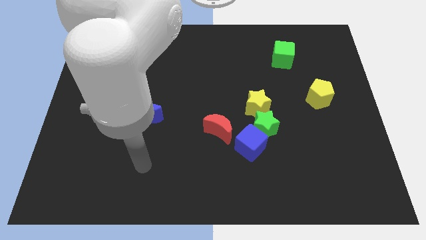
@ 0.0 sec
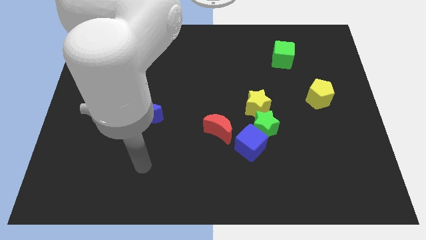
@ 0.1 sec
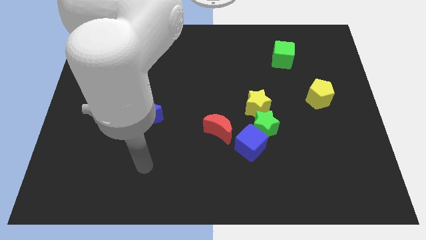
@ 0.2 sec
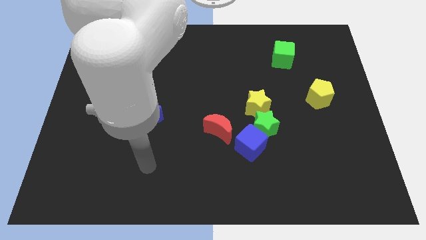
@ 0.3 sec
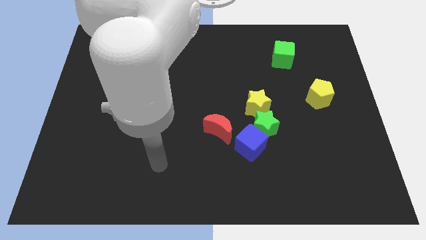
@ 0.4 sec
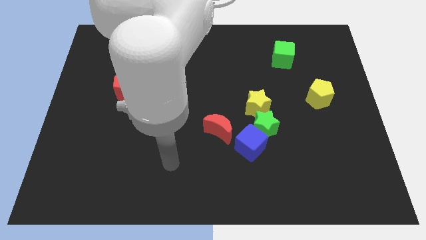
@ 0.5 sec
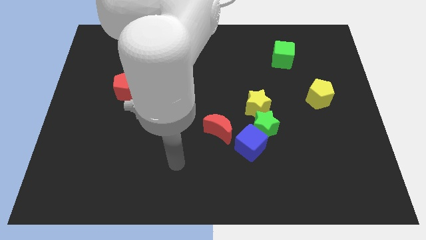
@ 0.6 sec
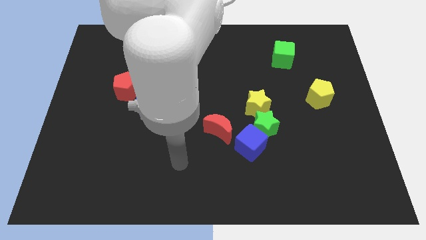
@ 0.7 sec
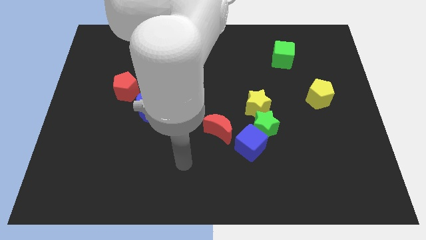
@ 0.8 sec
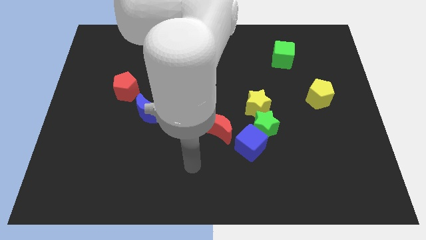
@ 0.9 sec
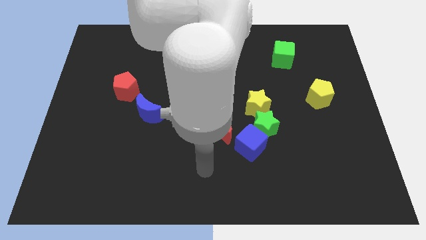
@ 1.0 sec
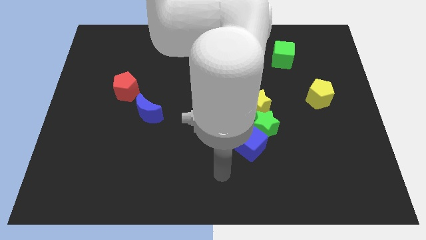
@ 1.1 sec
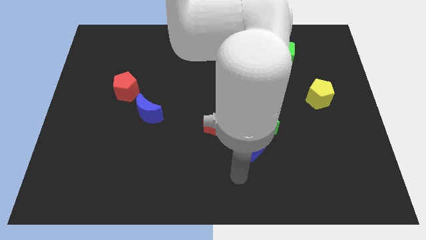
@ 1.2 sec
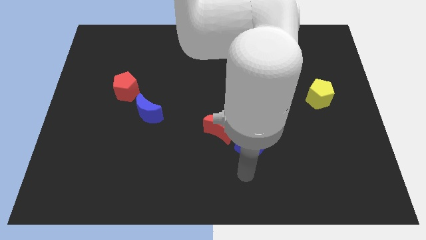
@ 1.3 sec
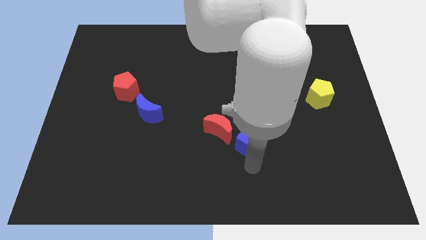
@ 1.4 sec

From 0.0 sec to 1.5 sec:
move your arm to the bottom of the blue cube

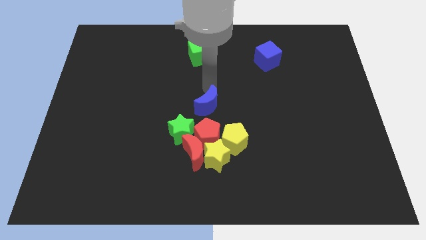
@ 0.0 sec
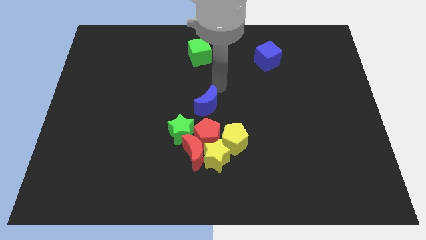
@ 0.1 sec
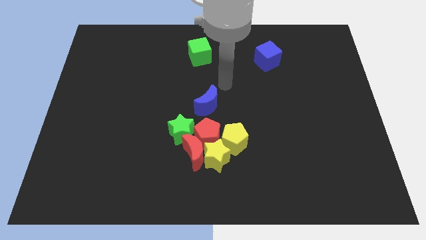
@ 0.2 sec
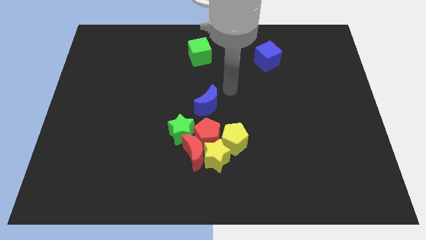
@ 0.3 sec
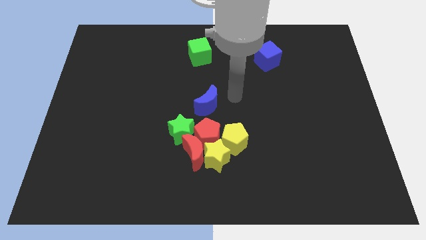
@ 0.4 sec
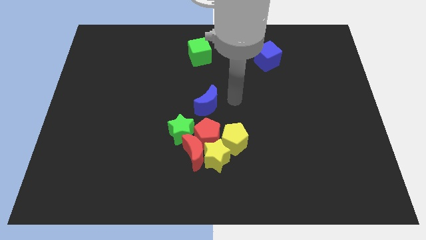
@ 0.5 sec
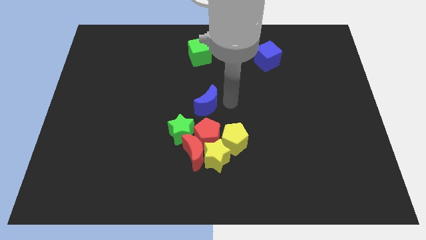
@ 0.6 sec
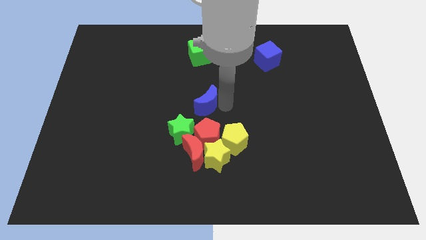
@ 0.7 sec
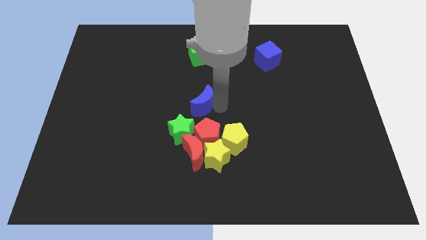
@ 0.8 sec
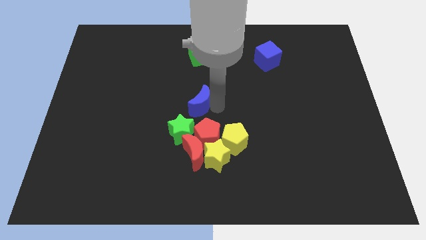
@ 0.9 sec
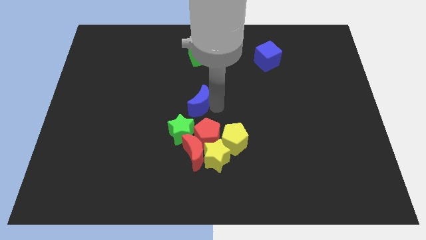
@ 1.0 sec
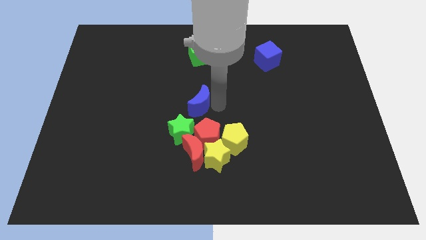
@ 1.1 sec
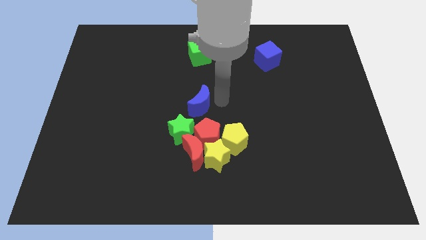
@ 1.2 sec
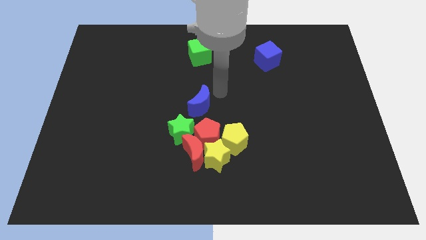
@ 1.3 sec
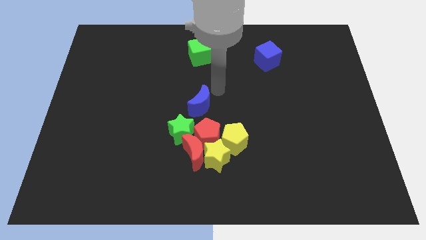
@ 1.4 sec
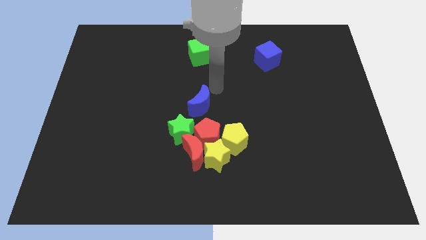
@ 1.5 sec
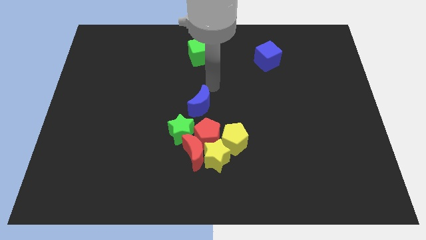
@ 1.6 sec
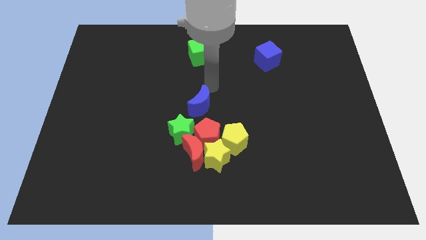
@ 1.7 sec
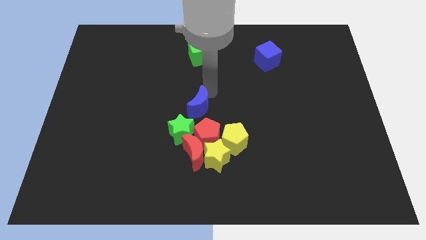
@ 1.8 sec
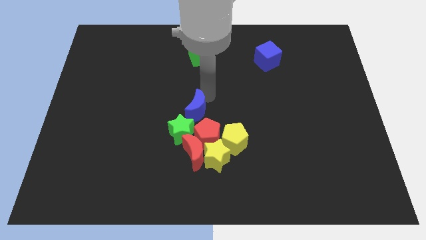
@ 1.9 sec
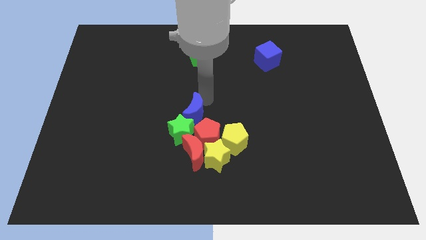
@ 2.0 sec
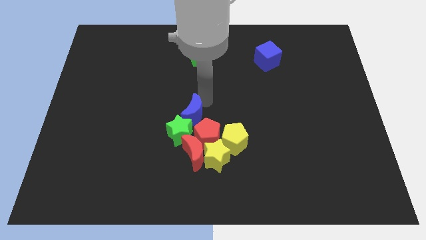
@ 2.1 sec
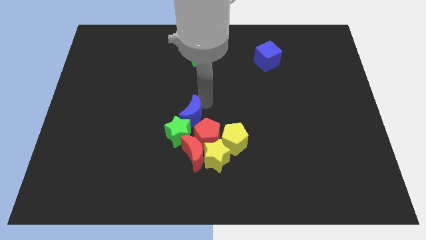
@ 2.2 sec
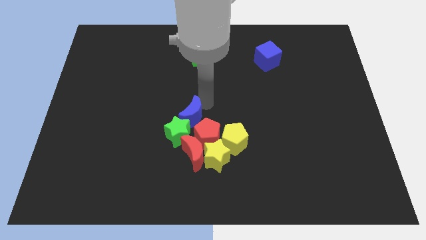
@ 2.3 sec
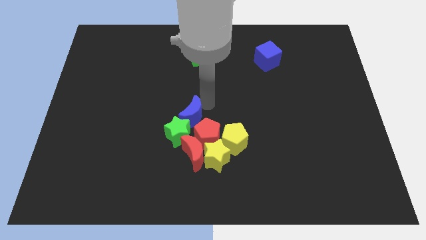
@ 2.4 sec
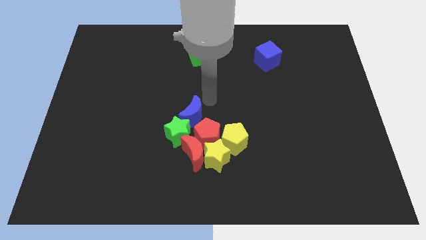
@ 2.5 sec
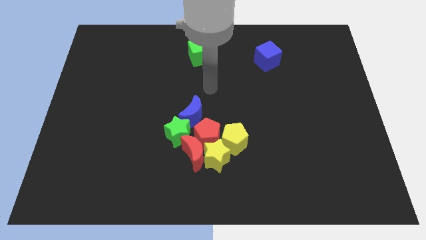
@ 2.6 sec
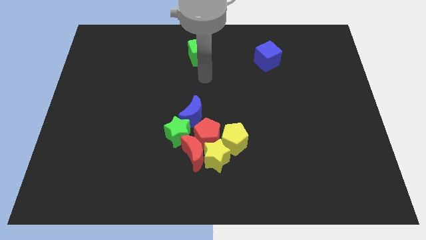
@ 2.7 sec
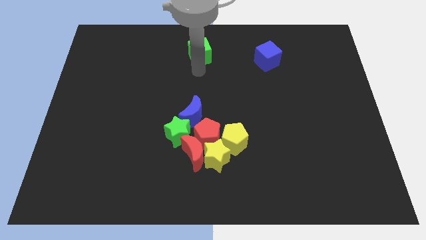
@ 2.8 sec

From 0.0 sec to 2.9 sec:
push the blue moon into green star

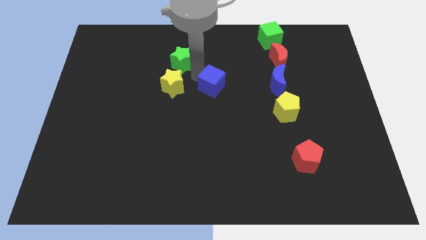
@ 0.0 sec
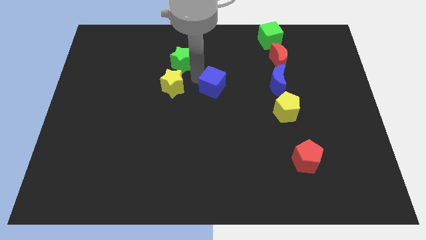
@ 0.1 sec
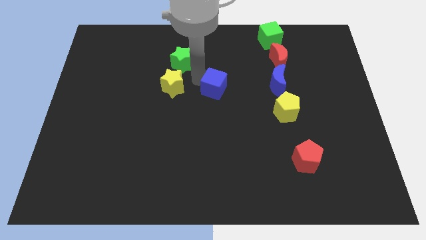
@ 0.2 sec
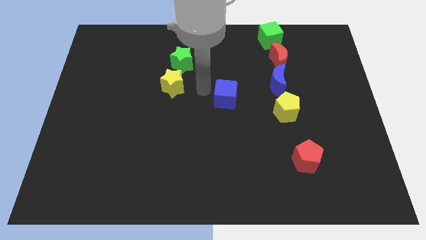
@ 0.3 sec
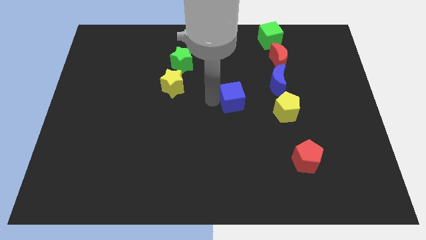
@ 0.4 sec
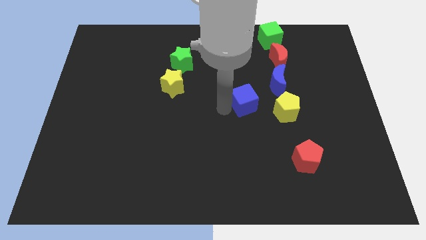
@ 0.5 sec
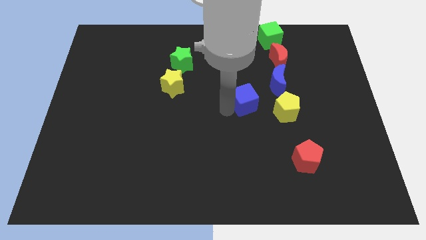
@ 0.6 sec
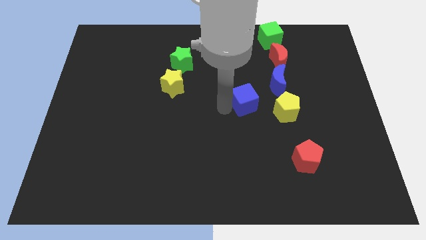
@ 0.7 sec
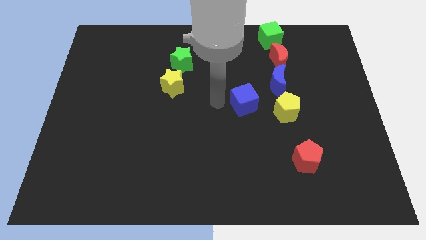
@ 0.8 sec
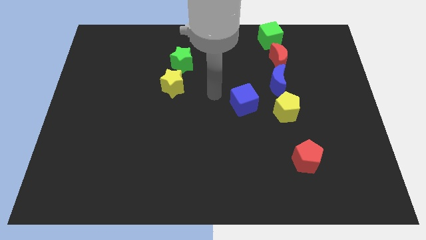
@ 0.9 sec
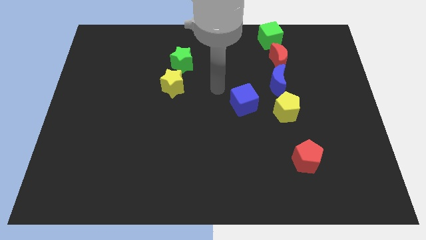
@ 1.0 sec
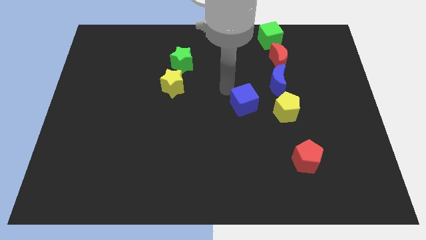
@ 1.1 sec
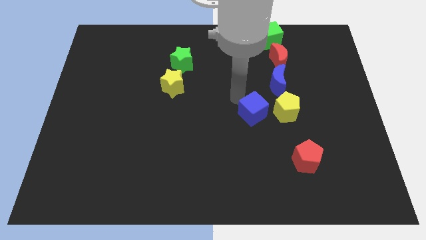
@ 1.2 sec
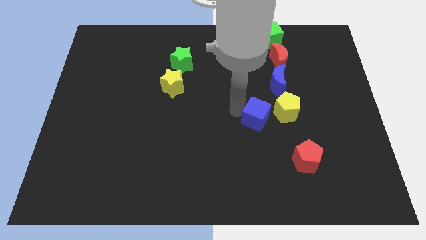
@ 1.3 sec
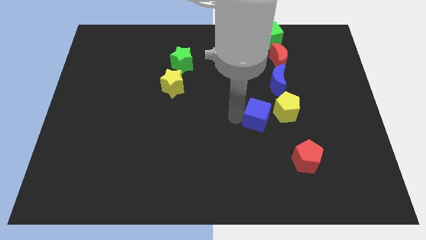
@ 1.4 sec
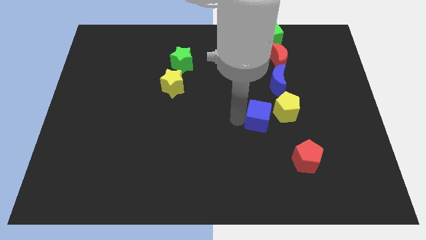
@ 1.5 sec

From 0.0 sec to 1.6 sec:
take the blue cube close to the yellow pentagon

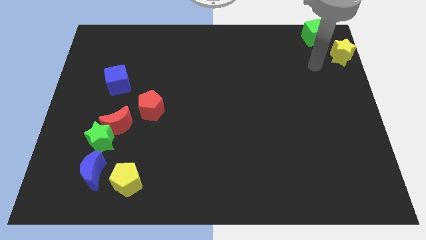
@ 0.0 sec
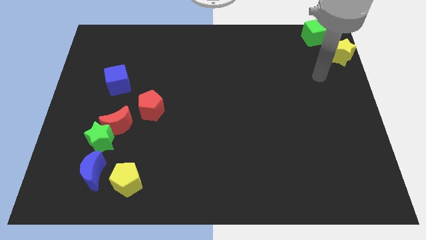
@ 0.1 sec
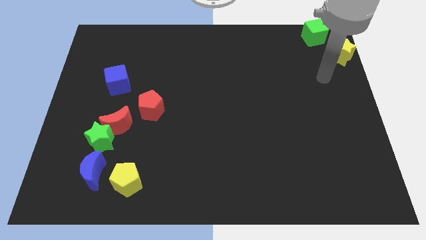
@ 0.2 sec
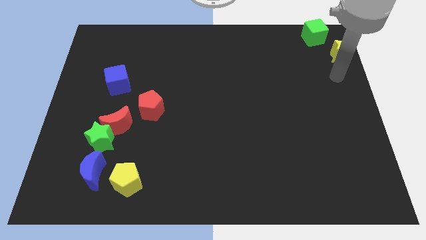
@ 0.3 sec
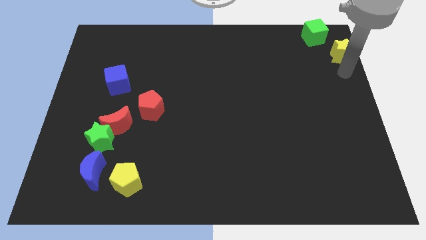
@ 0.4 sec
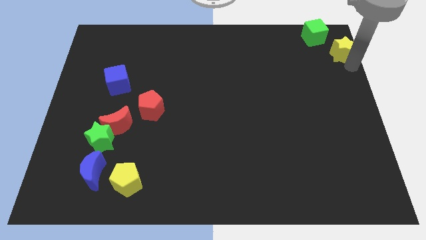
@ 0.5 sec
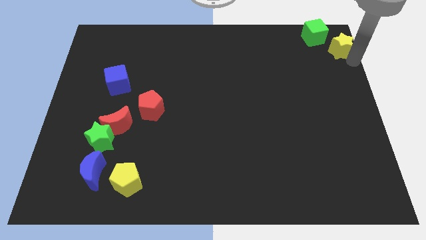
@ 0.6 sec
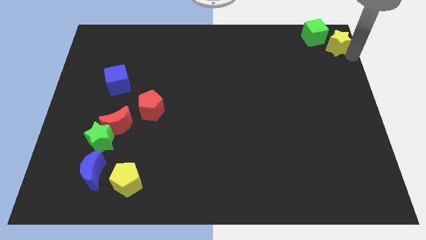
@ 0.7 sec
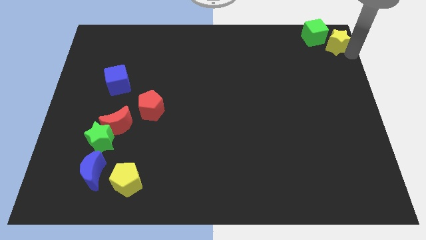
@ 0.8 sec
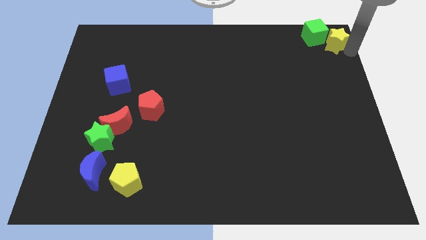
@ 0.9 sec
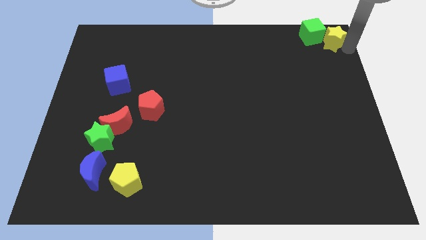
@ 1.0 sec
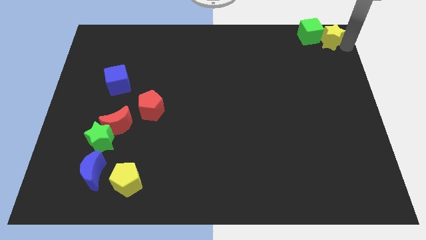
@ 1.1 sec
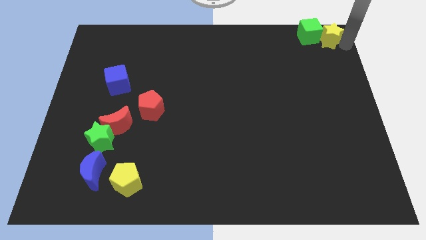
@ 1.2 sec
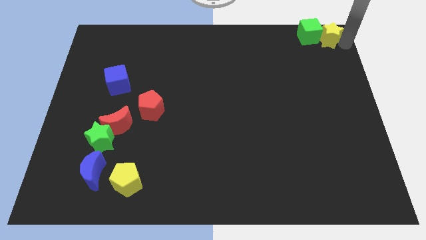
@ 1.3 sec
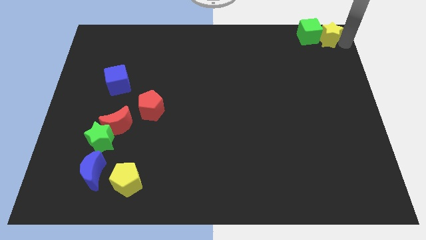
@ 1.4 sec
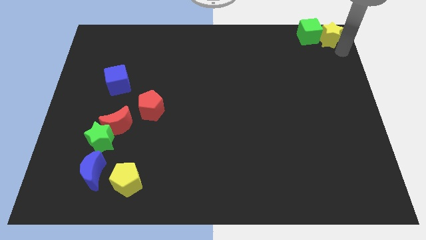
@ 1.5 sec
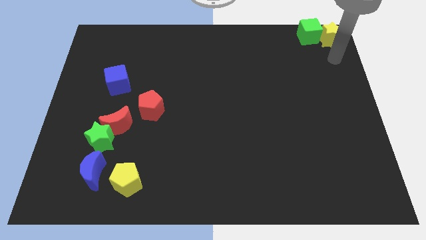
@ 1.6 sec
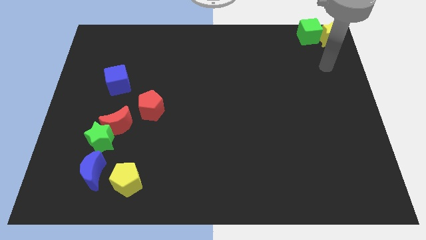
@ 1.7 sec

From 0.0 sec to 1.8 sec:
put the yellow star at the right side of the green cube

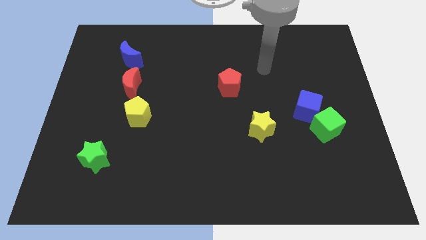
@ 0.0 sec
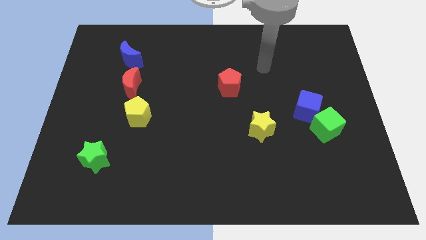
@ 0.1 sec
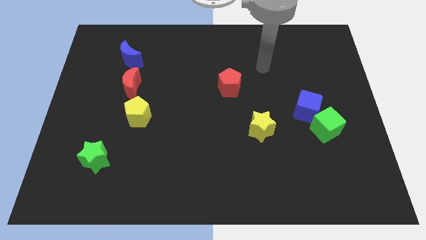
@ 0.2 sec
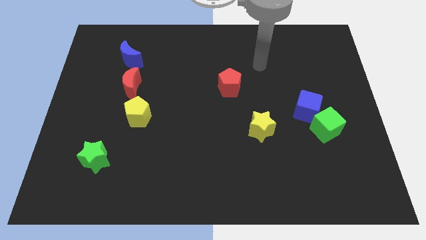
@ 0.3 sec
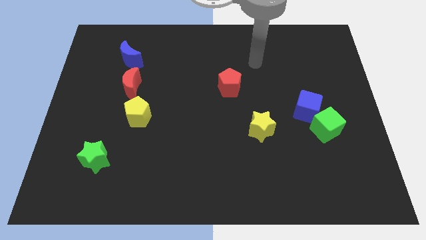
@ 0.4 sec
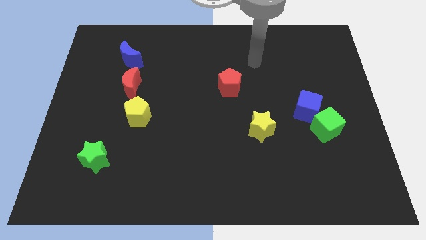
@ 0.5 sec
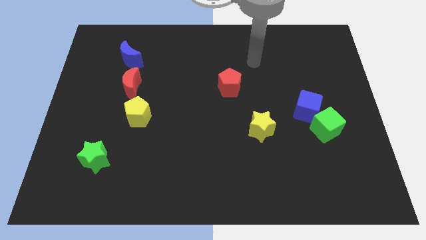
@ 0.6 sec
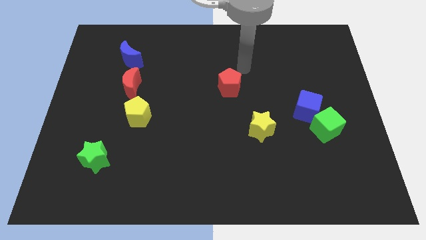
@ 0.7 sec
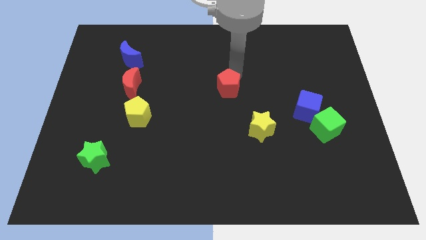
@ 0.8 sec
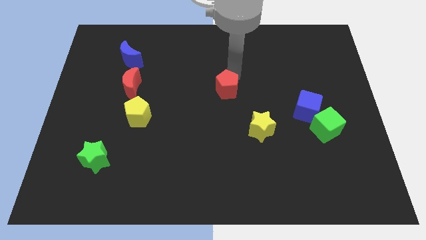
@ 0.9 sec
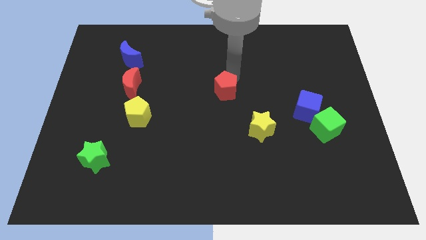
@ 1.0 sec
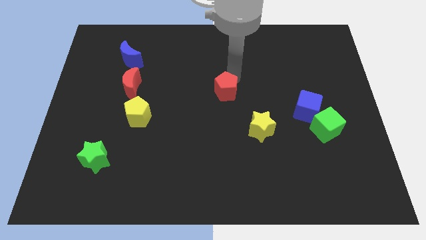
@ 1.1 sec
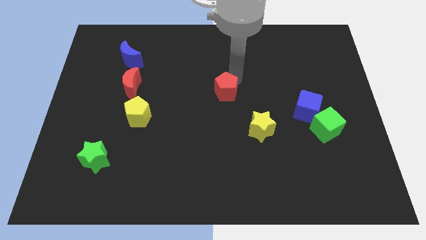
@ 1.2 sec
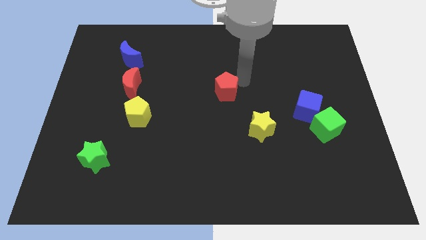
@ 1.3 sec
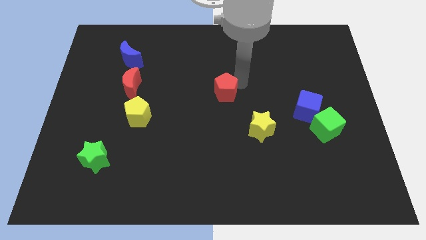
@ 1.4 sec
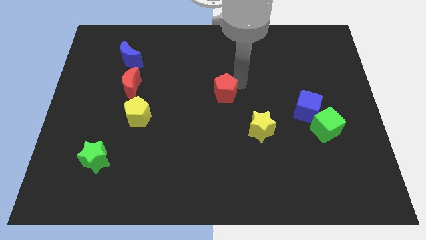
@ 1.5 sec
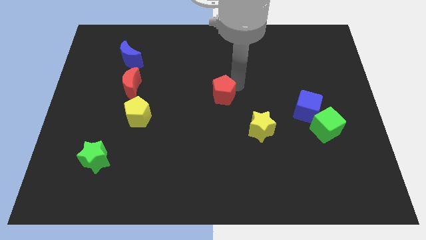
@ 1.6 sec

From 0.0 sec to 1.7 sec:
push red pentagon slightly down
